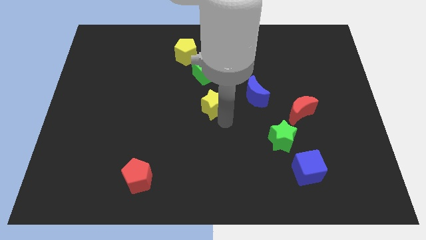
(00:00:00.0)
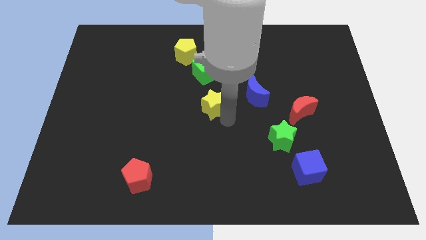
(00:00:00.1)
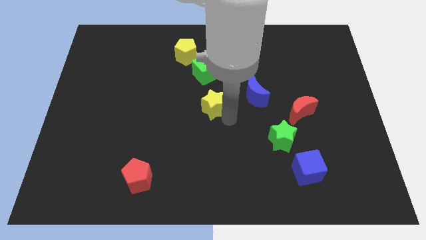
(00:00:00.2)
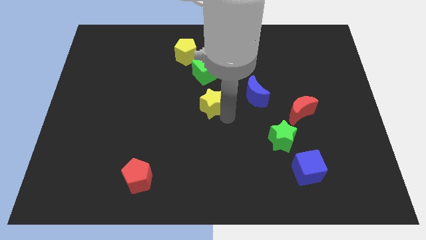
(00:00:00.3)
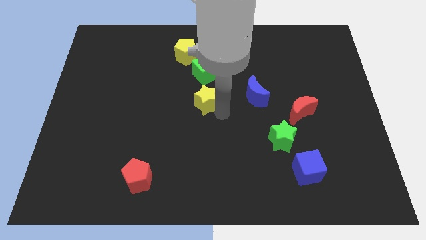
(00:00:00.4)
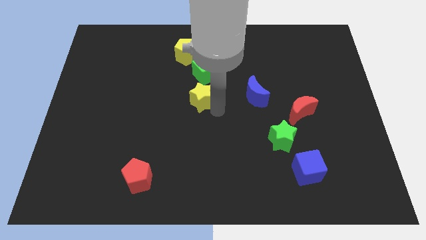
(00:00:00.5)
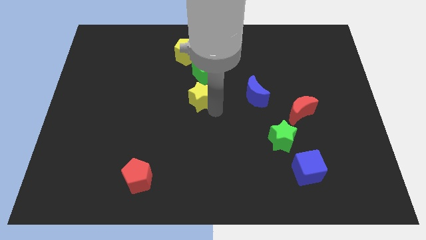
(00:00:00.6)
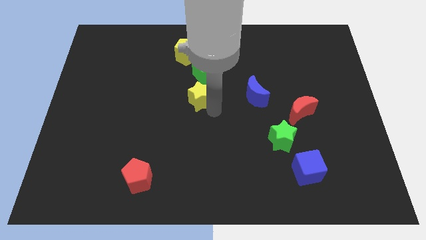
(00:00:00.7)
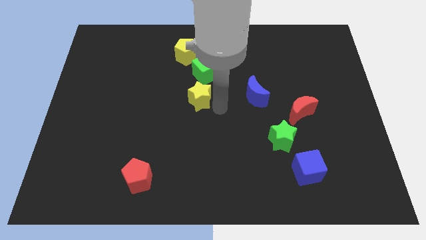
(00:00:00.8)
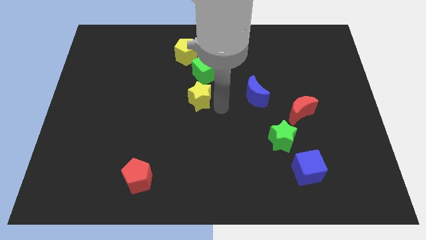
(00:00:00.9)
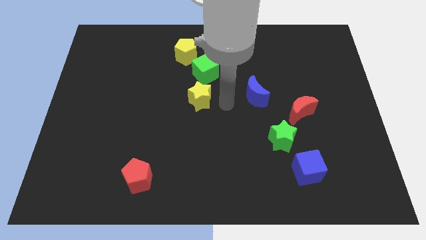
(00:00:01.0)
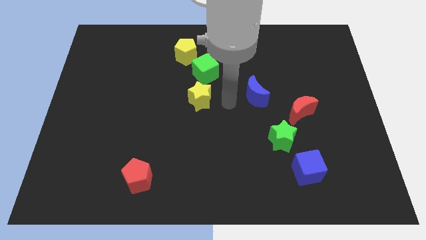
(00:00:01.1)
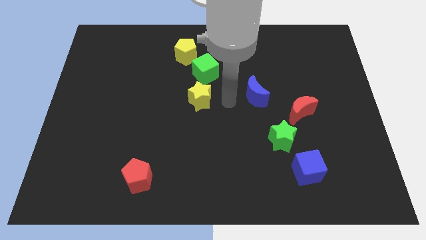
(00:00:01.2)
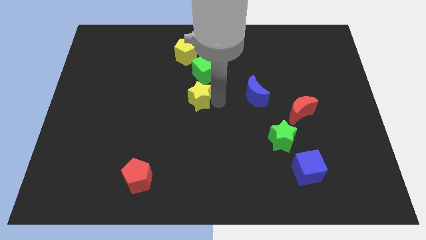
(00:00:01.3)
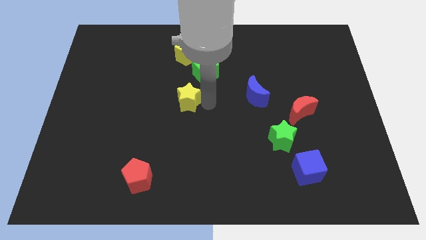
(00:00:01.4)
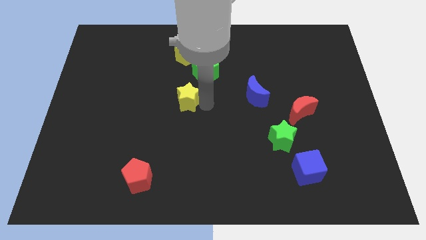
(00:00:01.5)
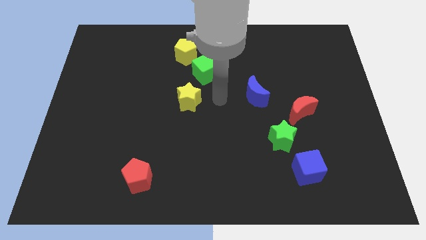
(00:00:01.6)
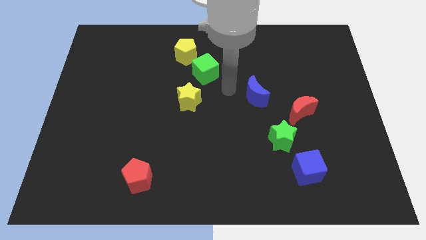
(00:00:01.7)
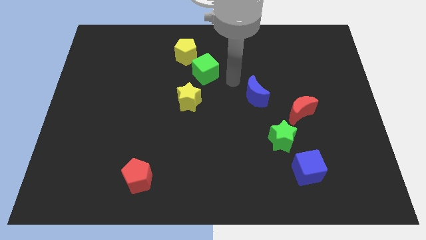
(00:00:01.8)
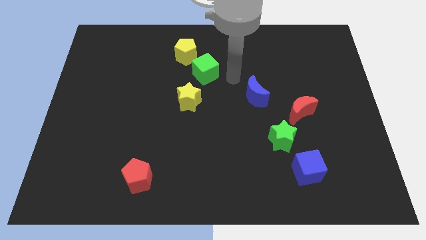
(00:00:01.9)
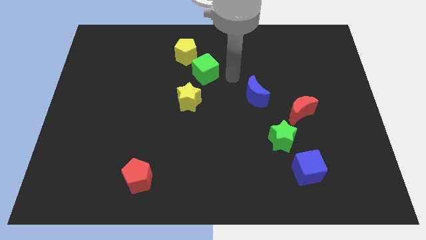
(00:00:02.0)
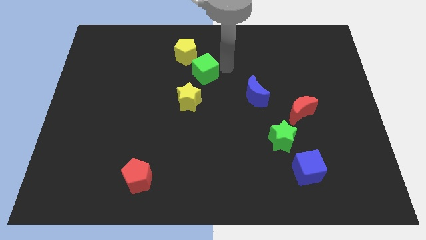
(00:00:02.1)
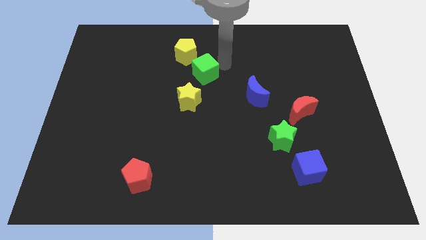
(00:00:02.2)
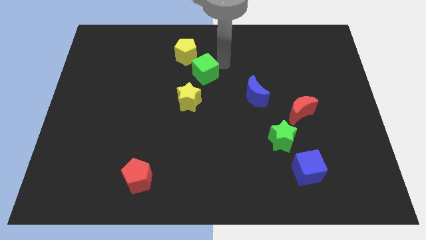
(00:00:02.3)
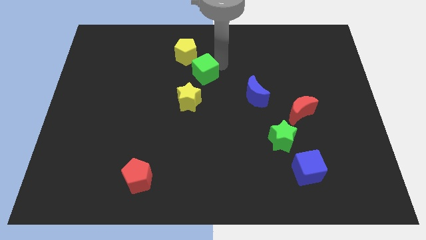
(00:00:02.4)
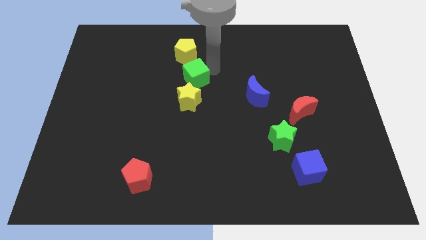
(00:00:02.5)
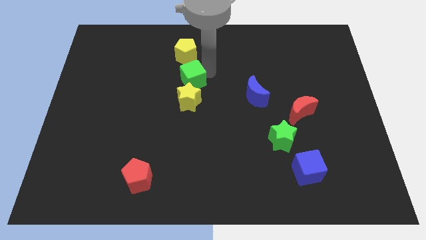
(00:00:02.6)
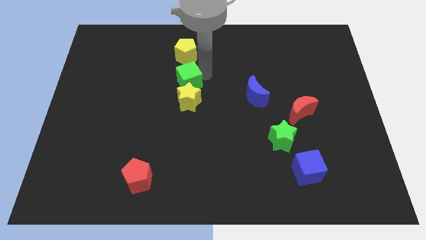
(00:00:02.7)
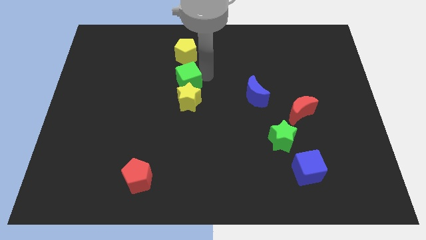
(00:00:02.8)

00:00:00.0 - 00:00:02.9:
move the green cube to the top of the yellow star

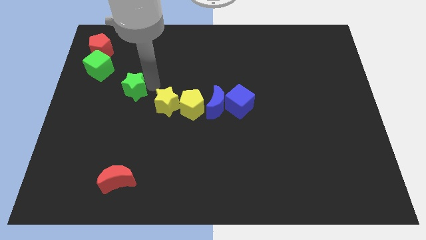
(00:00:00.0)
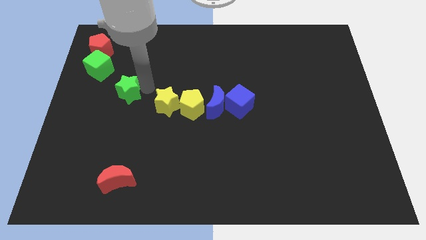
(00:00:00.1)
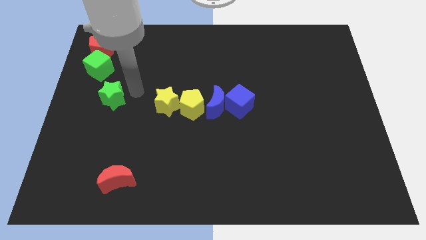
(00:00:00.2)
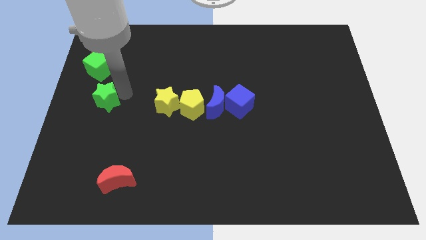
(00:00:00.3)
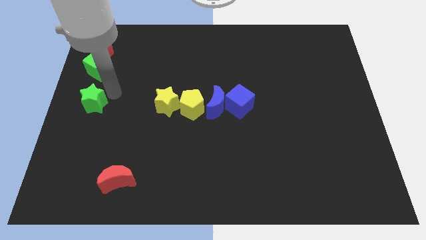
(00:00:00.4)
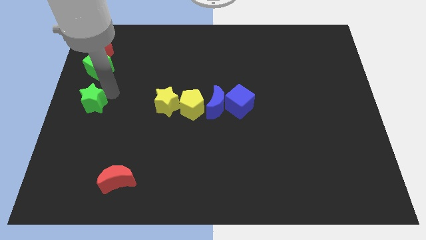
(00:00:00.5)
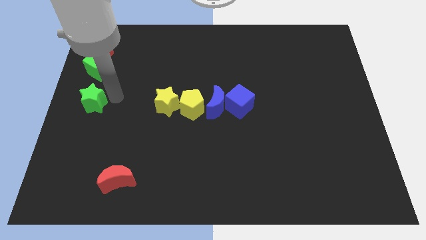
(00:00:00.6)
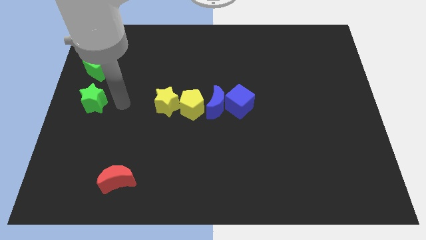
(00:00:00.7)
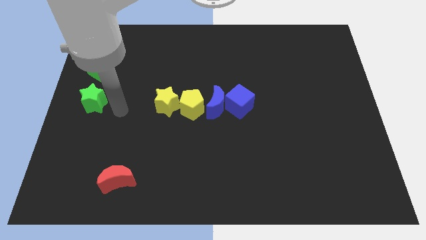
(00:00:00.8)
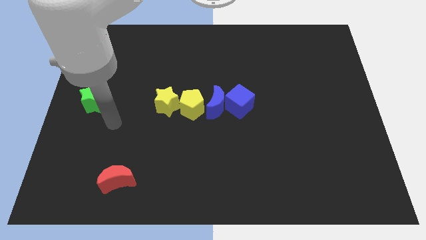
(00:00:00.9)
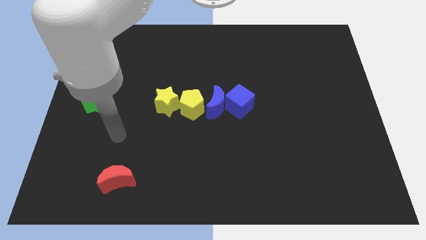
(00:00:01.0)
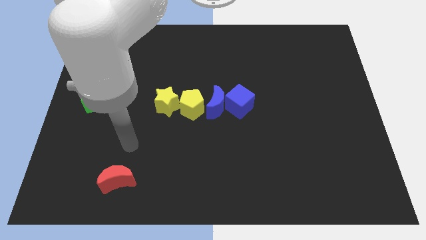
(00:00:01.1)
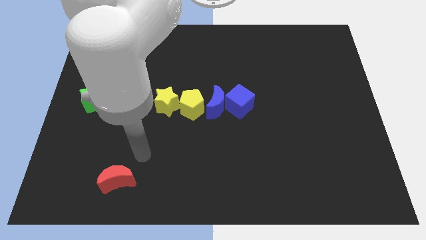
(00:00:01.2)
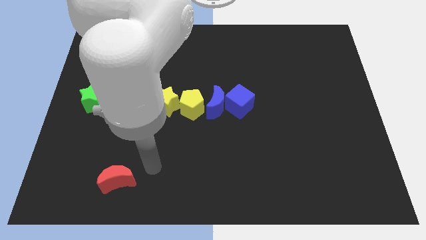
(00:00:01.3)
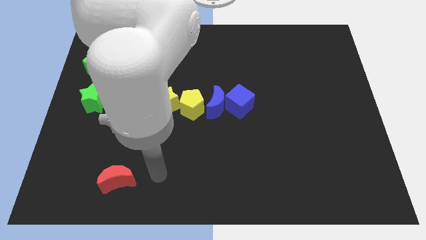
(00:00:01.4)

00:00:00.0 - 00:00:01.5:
move the green star slightly towards the bottom of the green cube

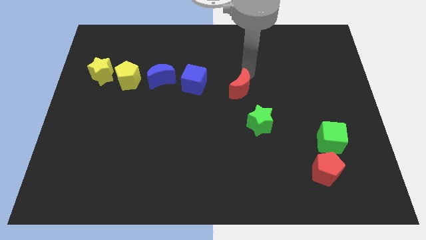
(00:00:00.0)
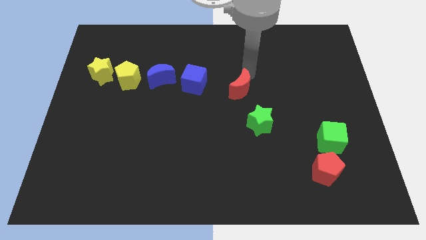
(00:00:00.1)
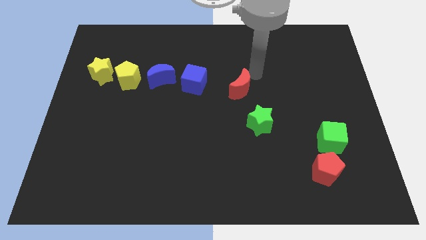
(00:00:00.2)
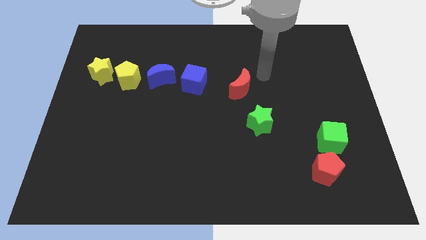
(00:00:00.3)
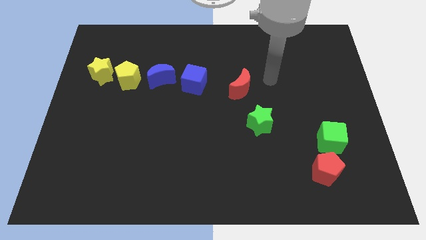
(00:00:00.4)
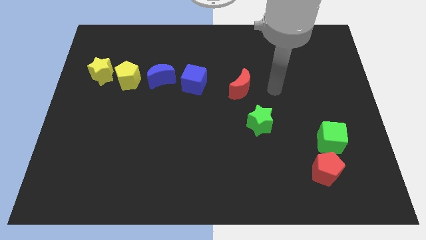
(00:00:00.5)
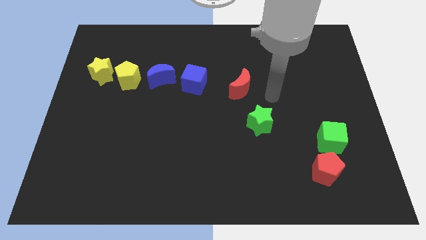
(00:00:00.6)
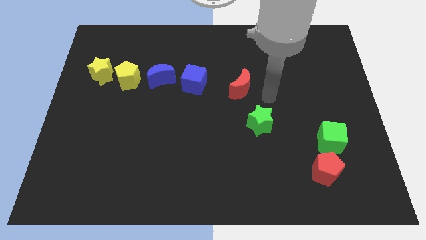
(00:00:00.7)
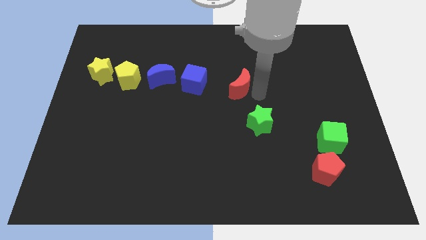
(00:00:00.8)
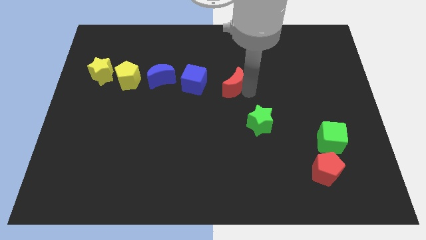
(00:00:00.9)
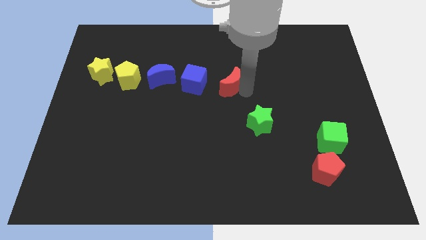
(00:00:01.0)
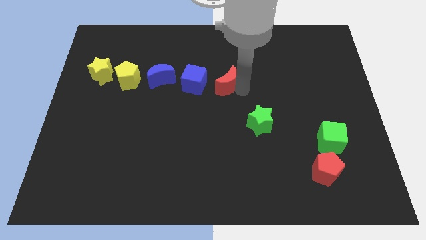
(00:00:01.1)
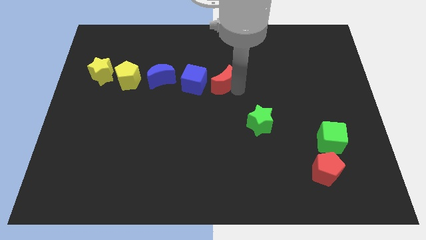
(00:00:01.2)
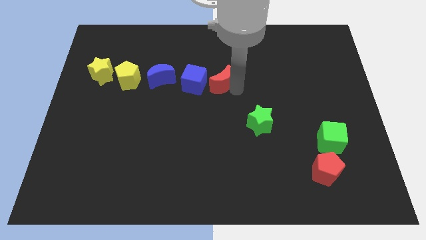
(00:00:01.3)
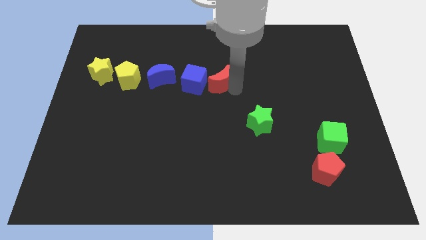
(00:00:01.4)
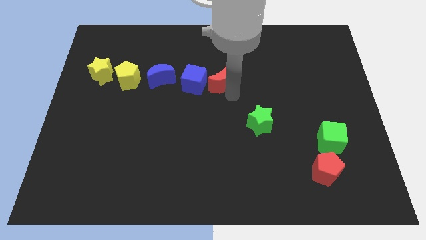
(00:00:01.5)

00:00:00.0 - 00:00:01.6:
place the red moon diagonally top left to green star

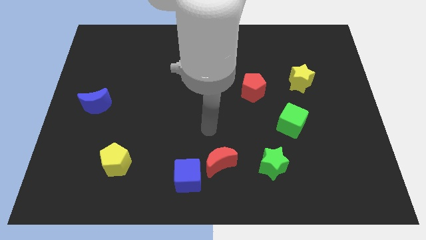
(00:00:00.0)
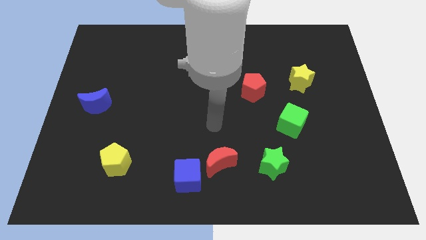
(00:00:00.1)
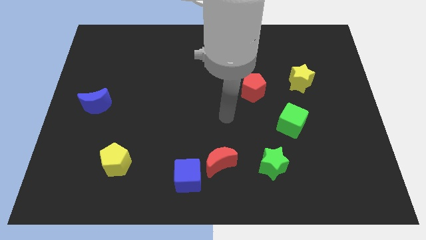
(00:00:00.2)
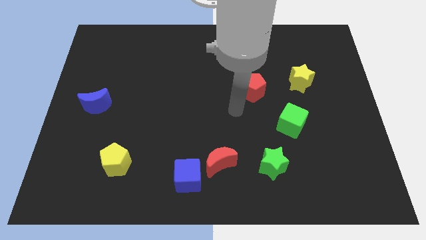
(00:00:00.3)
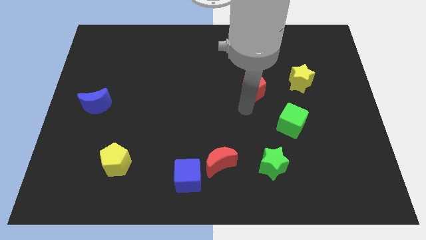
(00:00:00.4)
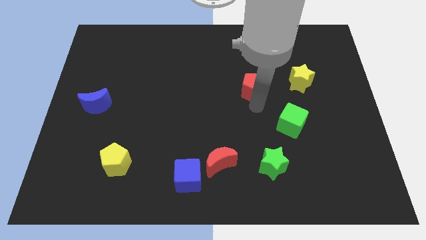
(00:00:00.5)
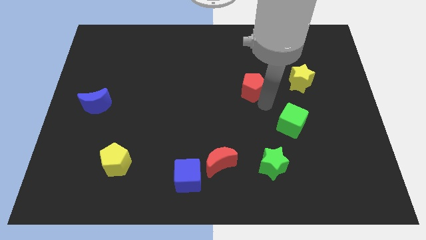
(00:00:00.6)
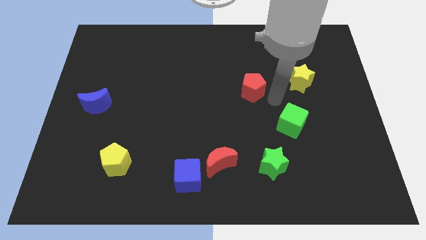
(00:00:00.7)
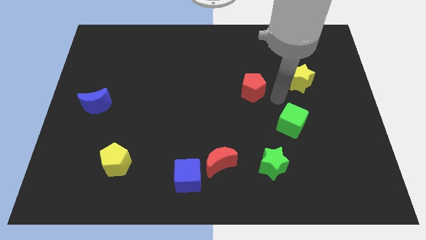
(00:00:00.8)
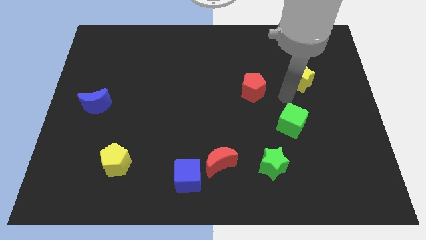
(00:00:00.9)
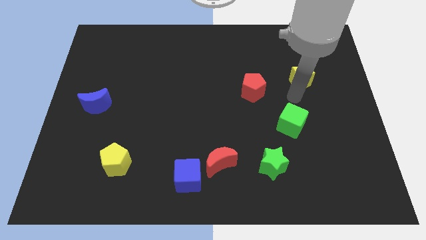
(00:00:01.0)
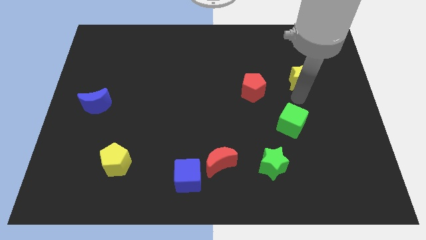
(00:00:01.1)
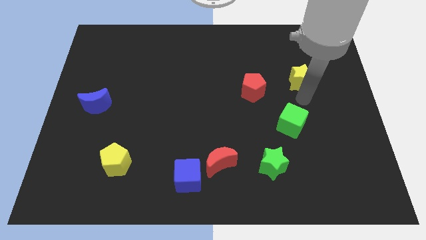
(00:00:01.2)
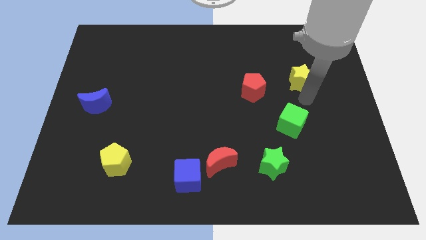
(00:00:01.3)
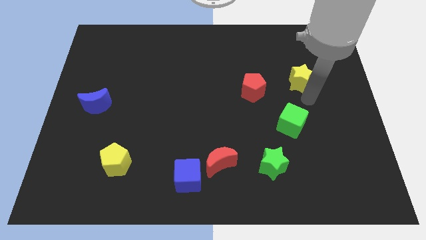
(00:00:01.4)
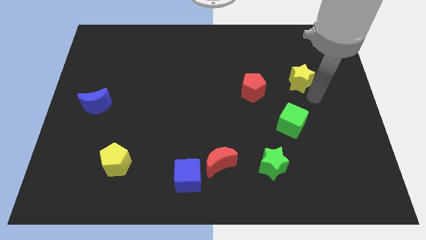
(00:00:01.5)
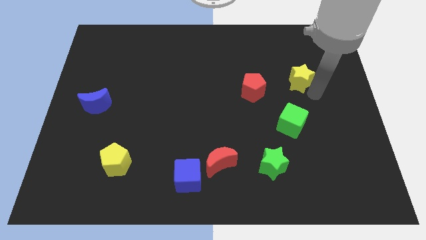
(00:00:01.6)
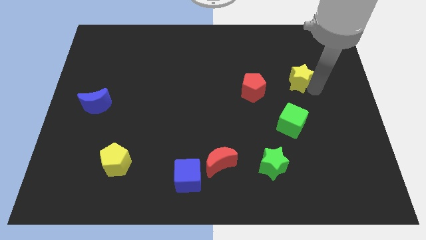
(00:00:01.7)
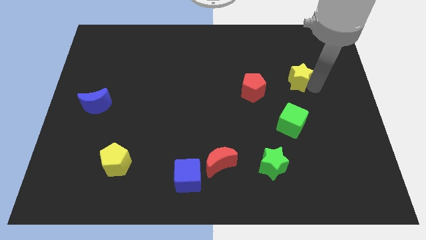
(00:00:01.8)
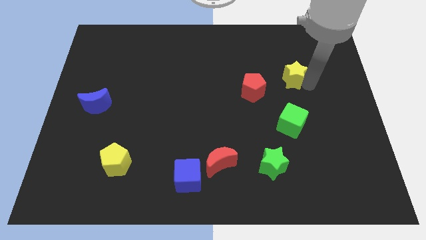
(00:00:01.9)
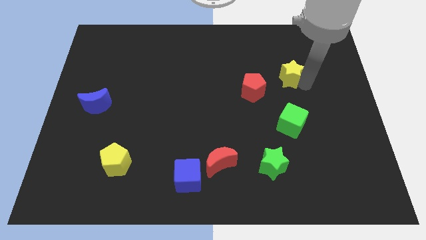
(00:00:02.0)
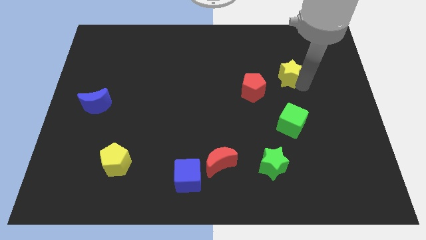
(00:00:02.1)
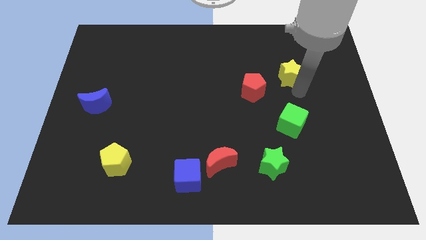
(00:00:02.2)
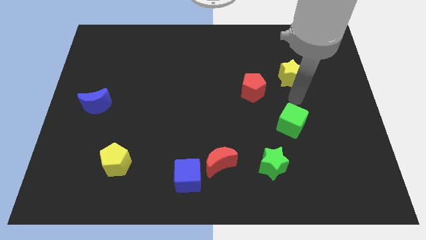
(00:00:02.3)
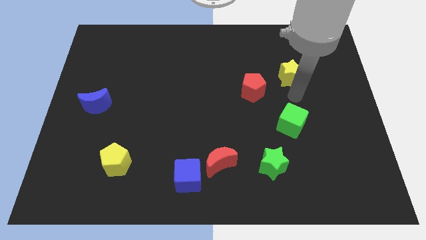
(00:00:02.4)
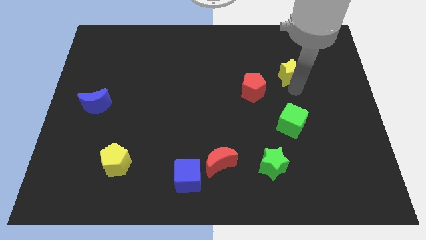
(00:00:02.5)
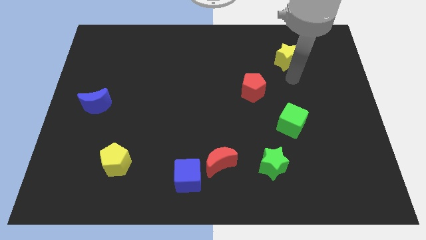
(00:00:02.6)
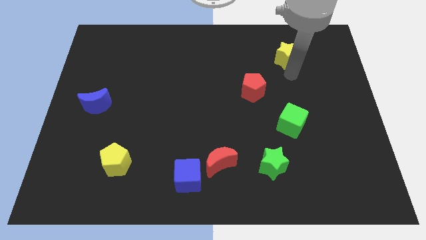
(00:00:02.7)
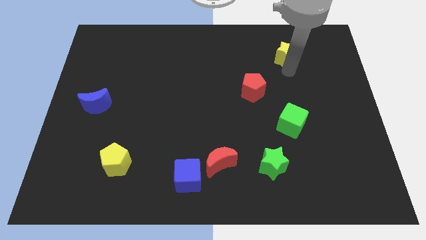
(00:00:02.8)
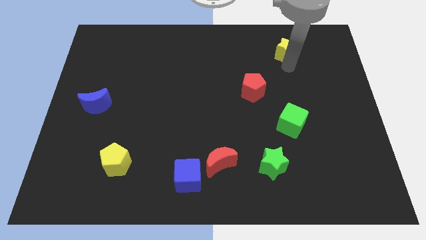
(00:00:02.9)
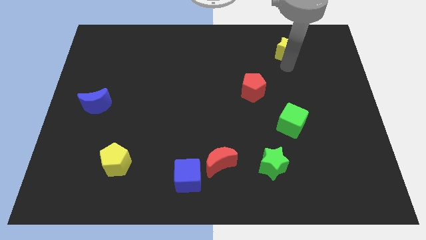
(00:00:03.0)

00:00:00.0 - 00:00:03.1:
place the yellow star diagonally top right to the red pentagon
